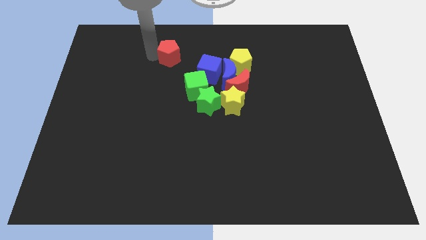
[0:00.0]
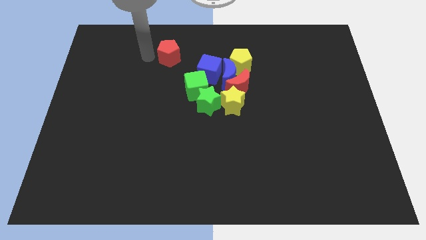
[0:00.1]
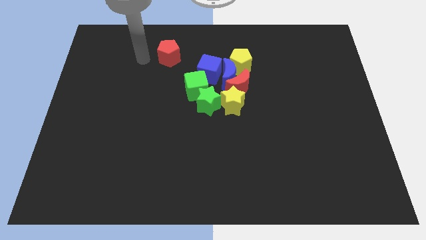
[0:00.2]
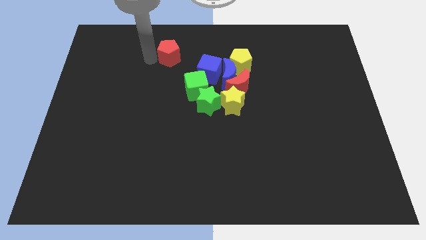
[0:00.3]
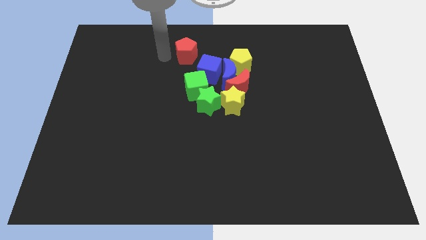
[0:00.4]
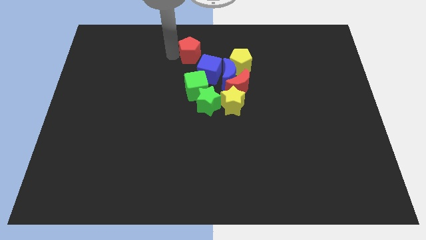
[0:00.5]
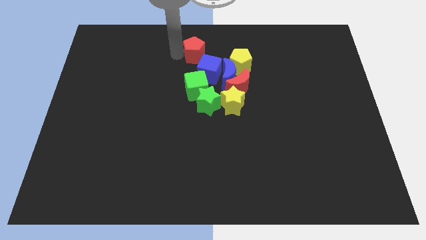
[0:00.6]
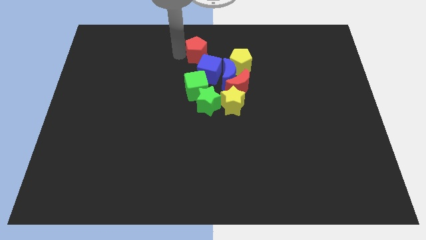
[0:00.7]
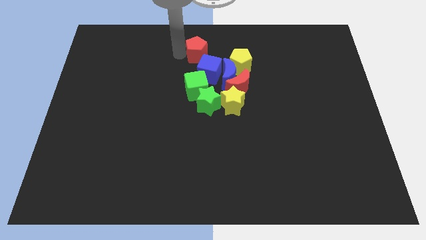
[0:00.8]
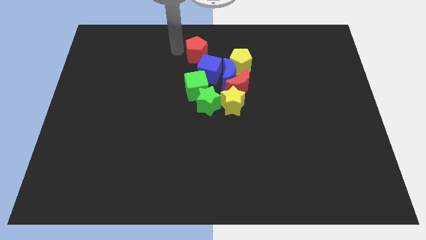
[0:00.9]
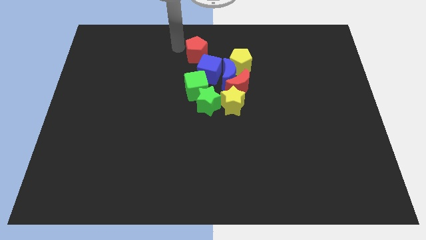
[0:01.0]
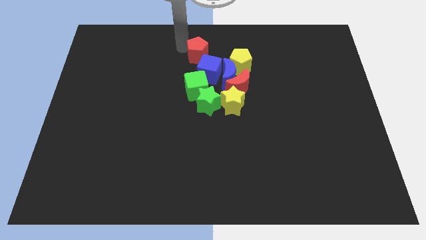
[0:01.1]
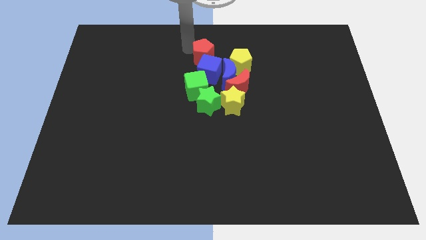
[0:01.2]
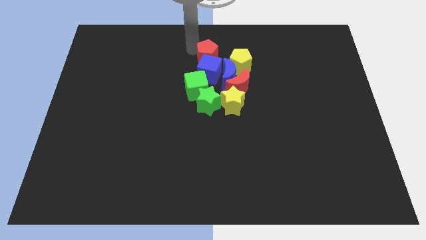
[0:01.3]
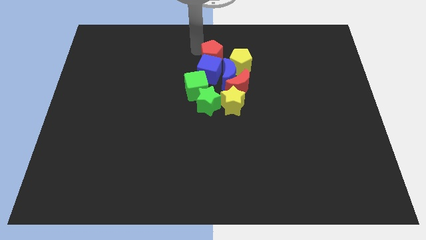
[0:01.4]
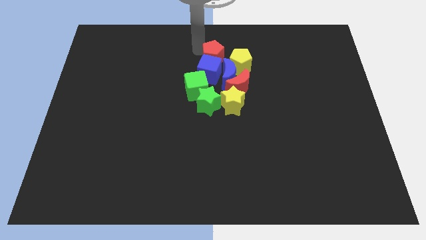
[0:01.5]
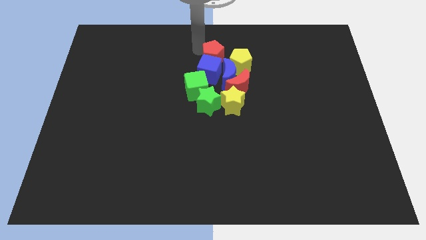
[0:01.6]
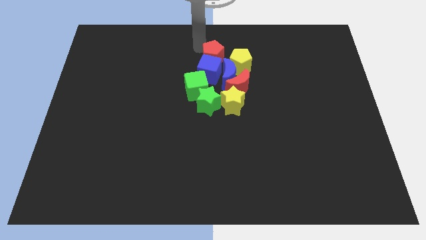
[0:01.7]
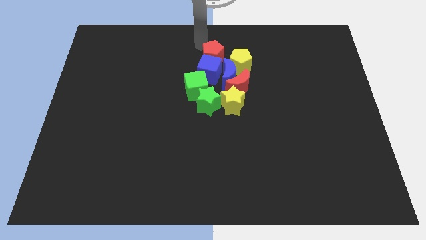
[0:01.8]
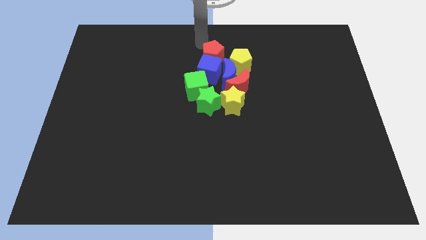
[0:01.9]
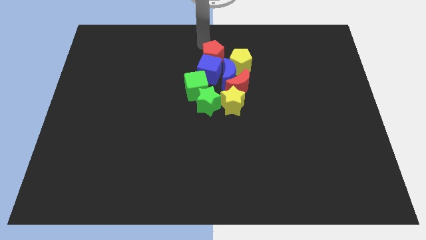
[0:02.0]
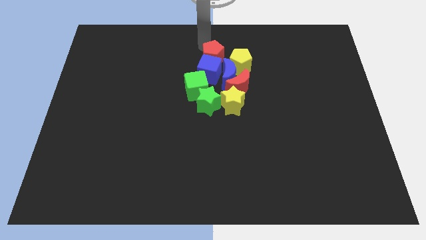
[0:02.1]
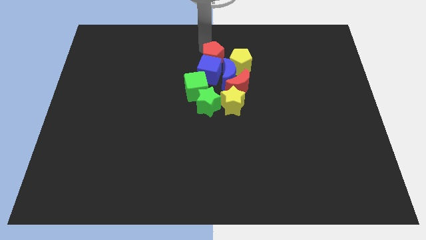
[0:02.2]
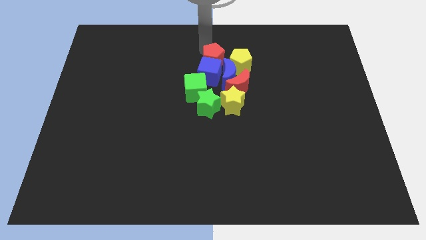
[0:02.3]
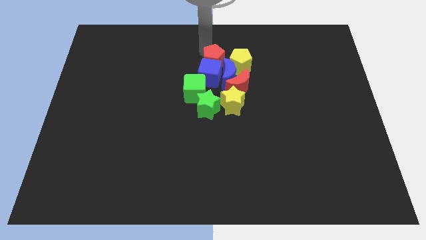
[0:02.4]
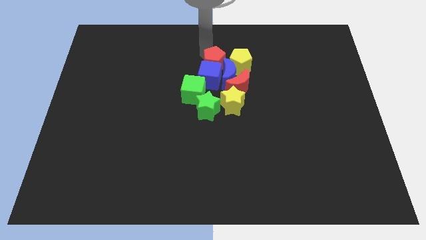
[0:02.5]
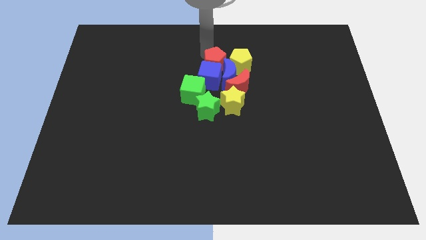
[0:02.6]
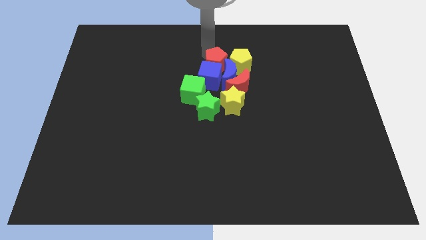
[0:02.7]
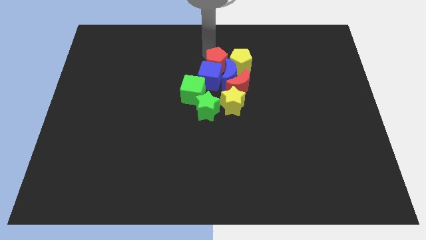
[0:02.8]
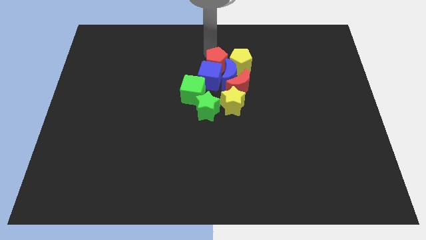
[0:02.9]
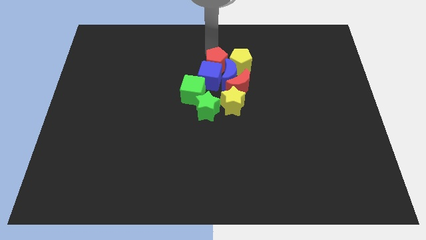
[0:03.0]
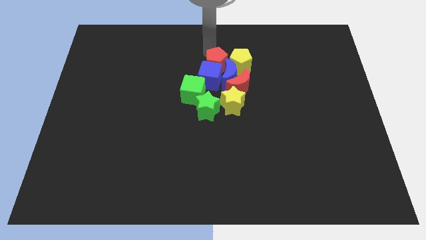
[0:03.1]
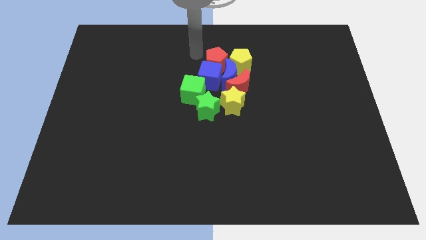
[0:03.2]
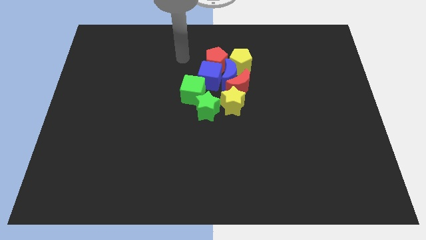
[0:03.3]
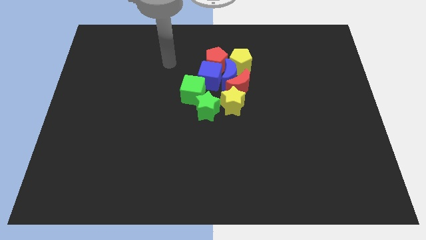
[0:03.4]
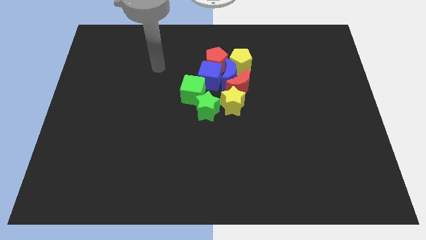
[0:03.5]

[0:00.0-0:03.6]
place the red pentagon on top of the blue cube

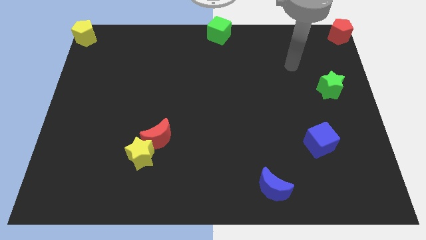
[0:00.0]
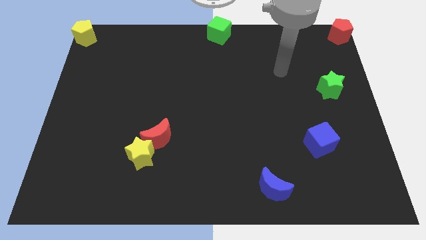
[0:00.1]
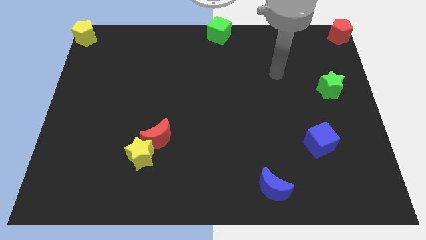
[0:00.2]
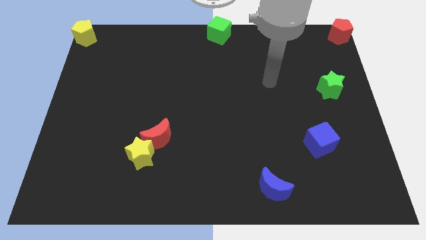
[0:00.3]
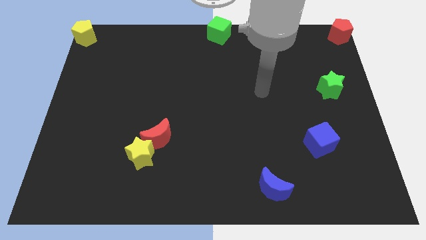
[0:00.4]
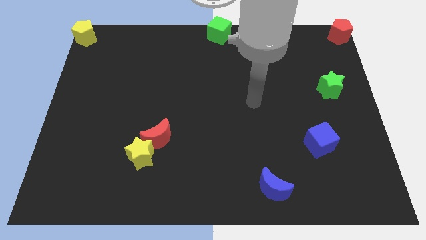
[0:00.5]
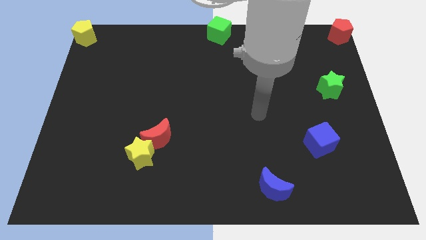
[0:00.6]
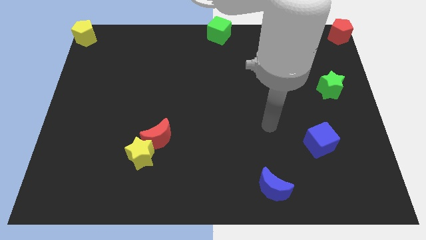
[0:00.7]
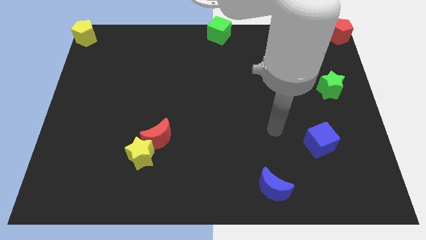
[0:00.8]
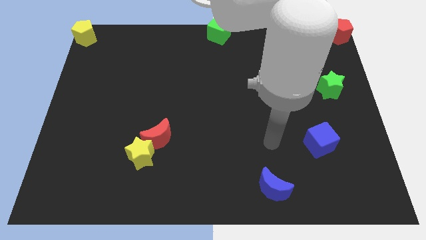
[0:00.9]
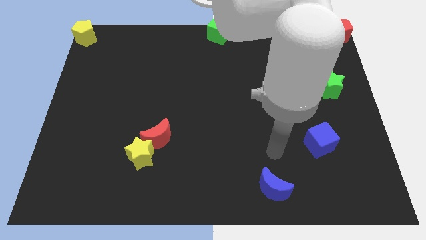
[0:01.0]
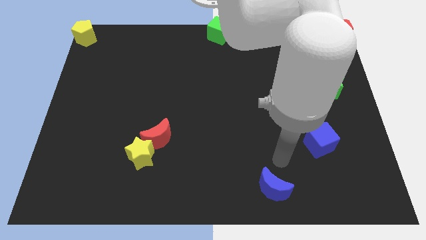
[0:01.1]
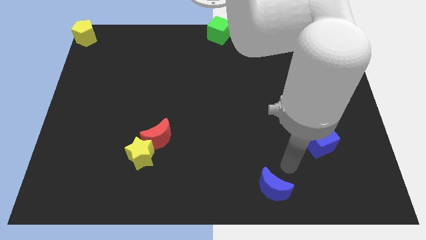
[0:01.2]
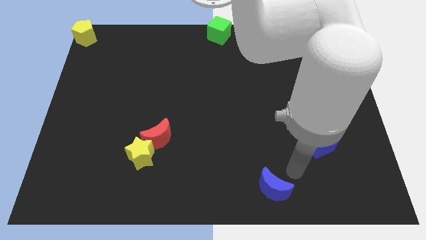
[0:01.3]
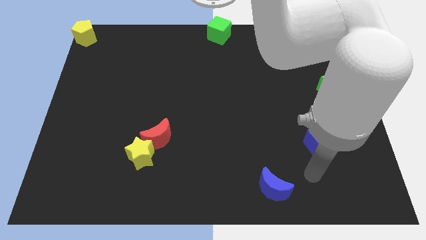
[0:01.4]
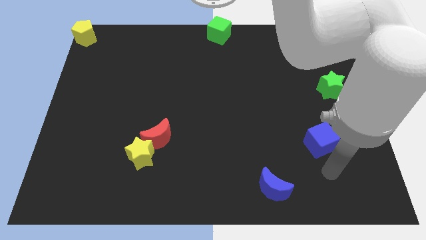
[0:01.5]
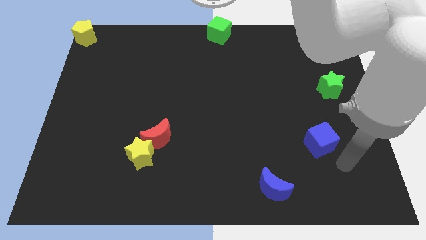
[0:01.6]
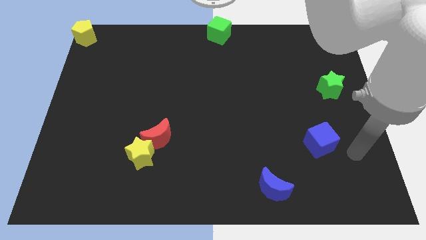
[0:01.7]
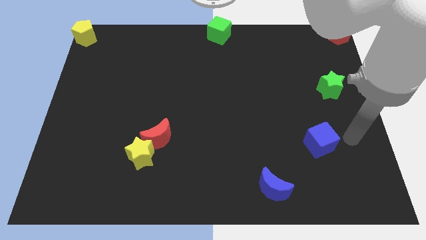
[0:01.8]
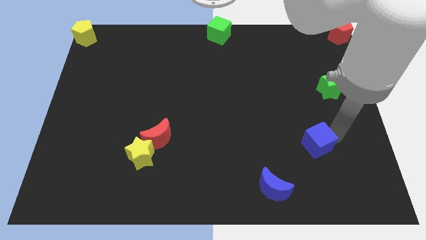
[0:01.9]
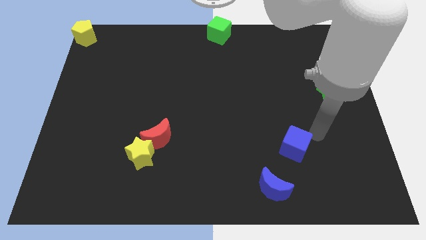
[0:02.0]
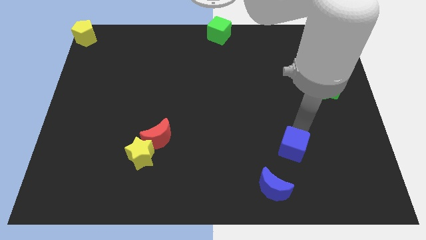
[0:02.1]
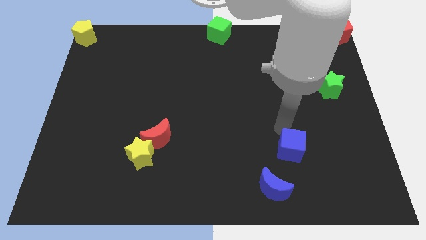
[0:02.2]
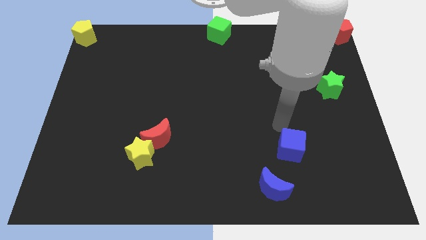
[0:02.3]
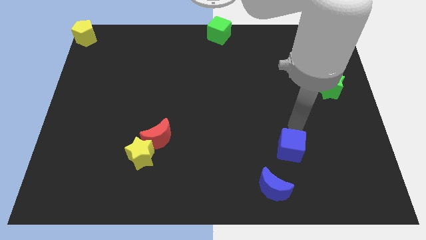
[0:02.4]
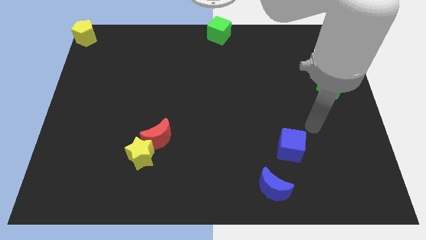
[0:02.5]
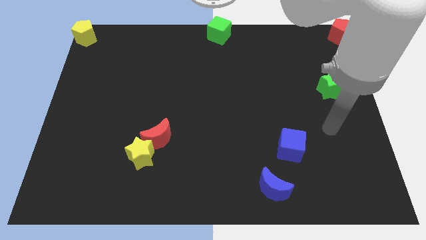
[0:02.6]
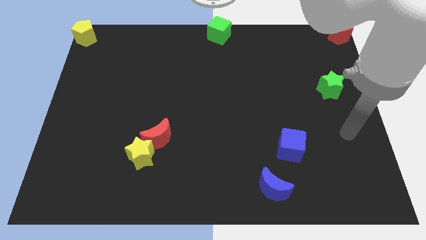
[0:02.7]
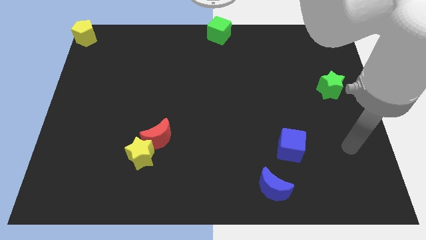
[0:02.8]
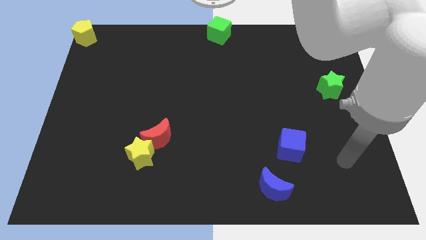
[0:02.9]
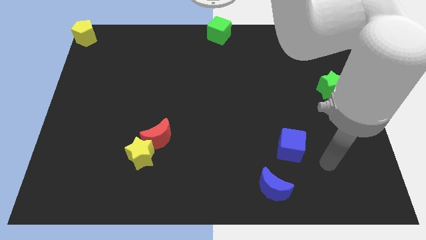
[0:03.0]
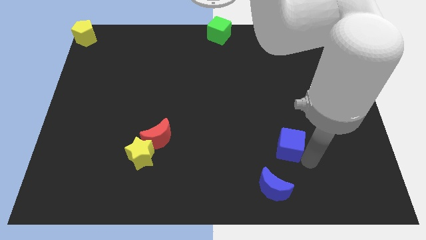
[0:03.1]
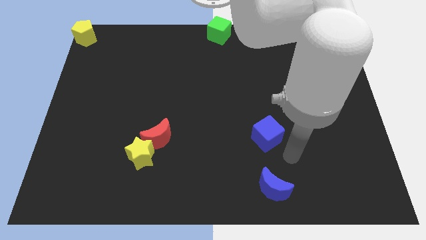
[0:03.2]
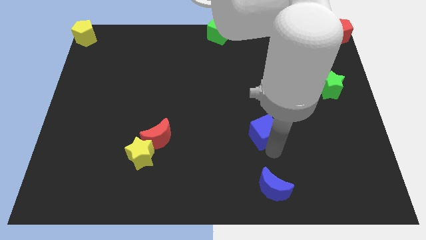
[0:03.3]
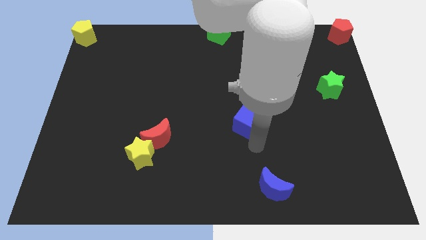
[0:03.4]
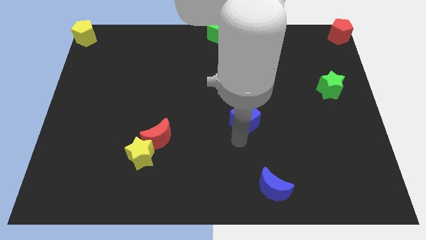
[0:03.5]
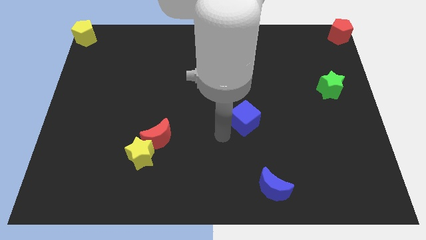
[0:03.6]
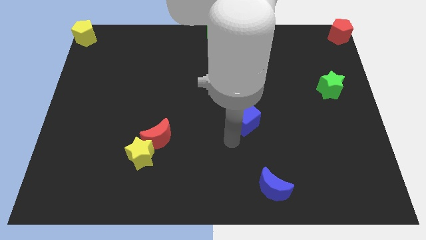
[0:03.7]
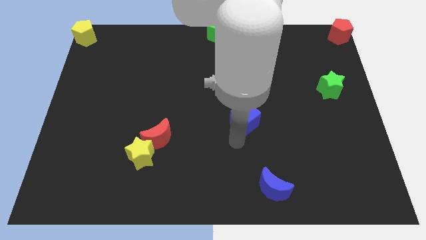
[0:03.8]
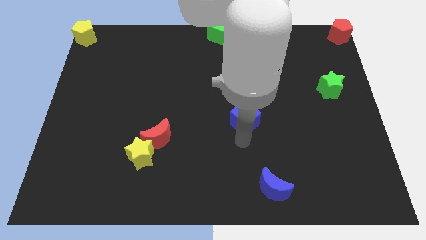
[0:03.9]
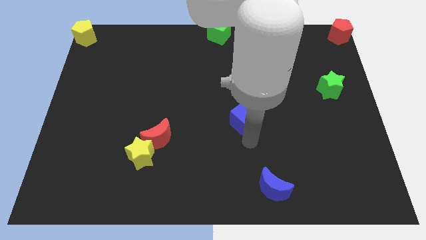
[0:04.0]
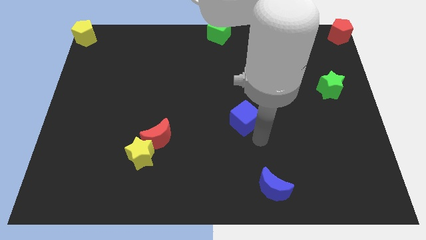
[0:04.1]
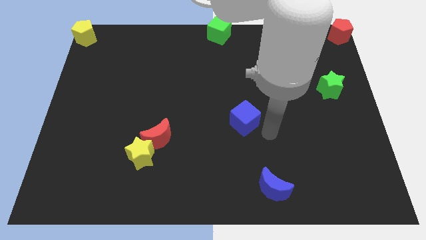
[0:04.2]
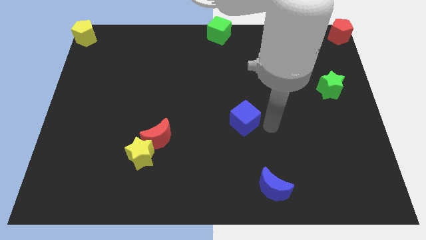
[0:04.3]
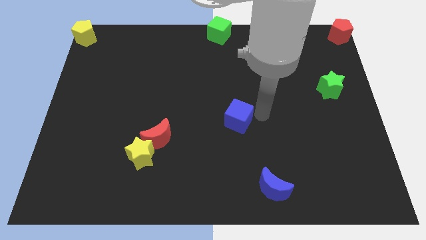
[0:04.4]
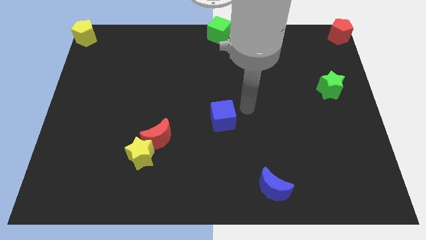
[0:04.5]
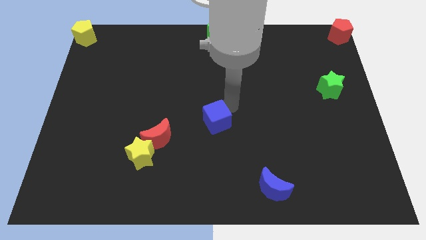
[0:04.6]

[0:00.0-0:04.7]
push the blue cube to the center

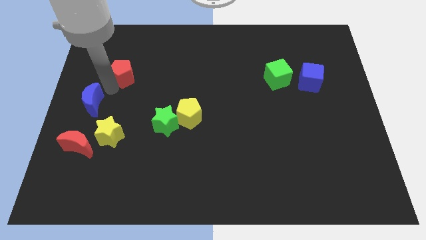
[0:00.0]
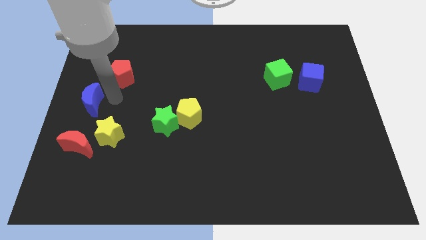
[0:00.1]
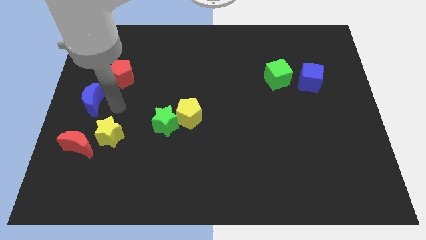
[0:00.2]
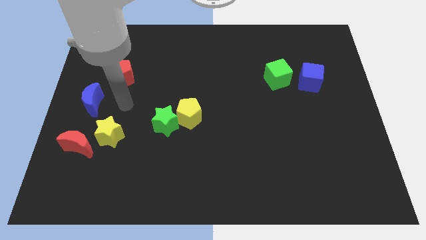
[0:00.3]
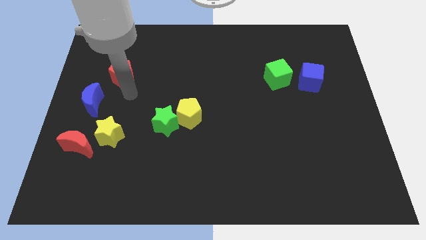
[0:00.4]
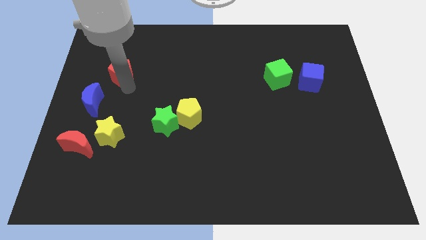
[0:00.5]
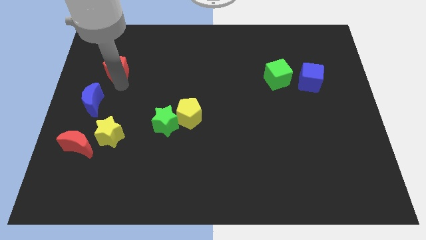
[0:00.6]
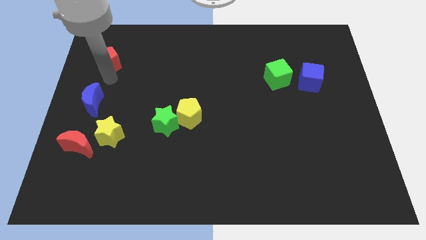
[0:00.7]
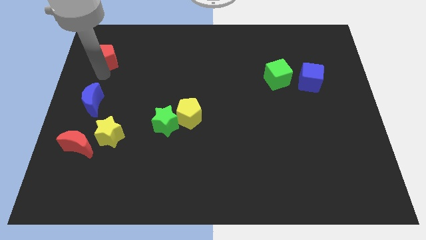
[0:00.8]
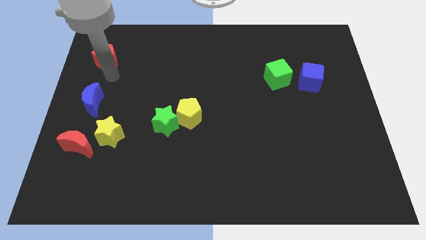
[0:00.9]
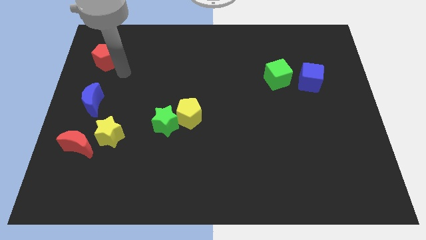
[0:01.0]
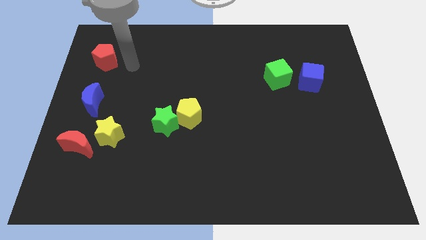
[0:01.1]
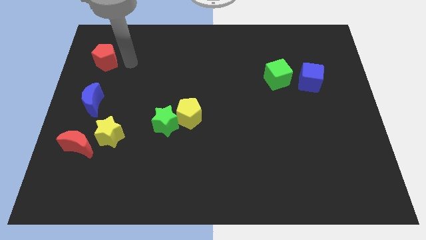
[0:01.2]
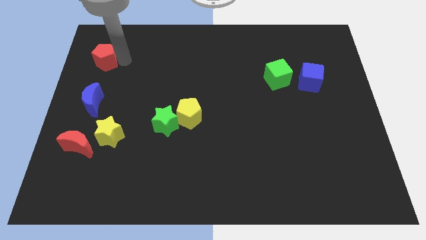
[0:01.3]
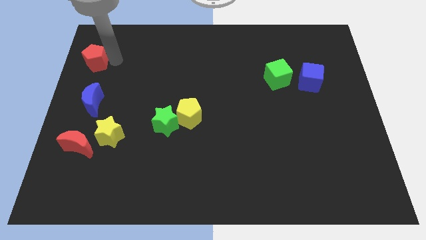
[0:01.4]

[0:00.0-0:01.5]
push the red pentagon to the top of the blue crescent
